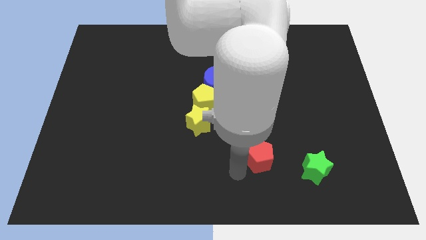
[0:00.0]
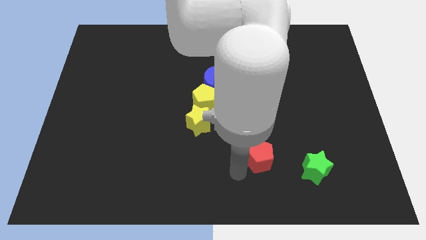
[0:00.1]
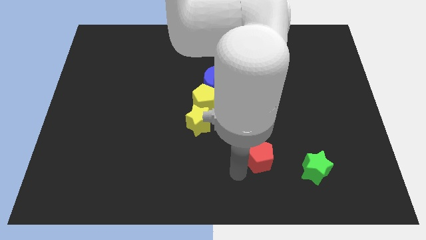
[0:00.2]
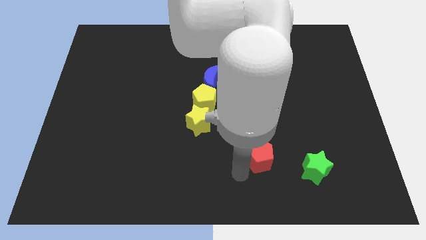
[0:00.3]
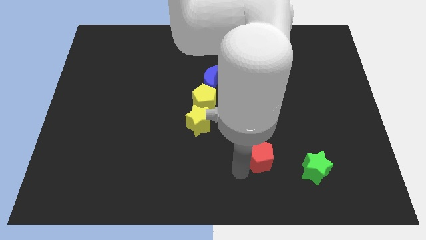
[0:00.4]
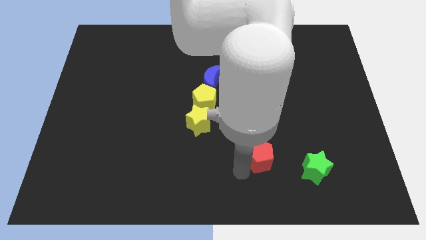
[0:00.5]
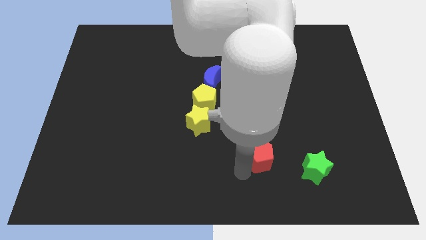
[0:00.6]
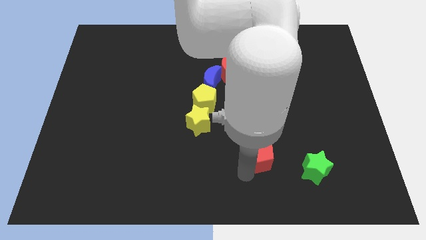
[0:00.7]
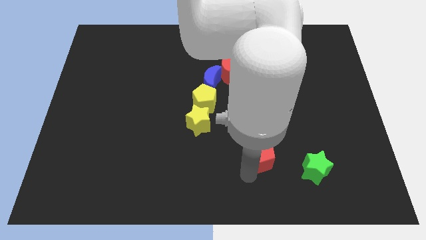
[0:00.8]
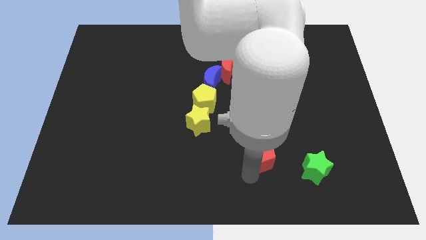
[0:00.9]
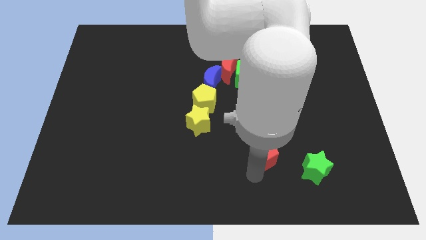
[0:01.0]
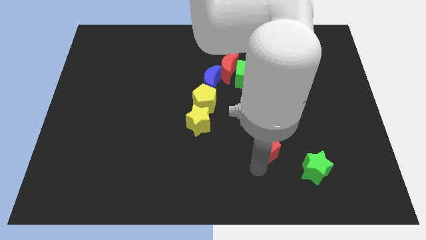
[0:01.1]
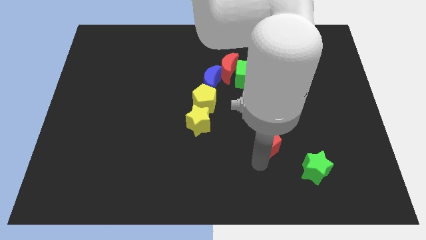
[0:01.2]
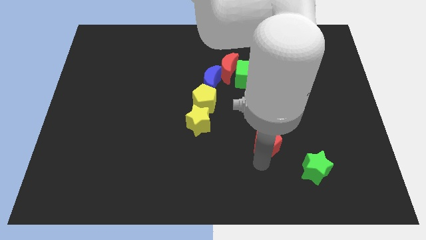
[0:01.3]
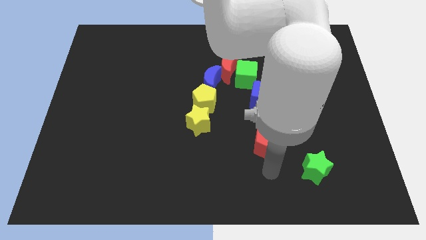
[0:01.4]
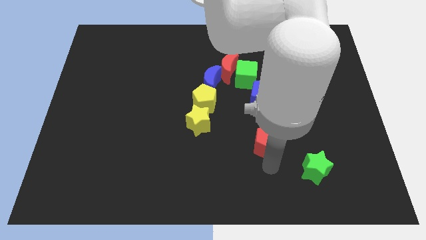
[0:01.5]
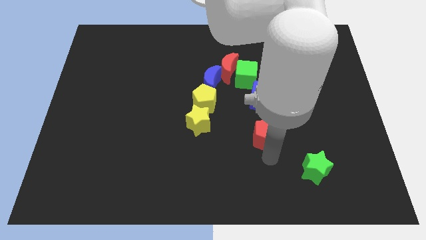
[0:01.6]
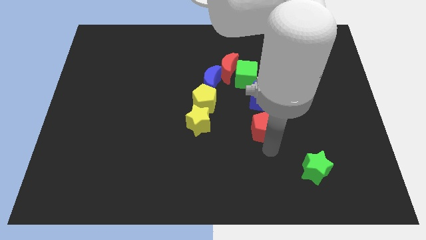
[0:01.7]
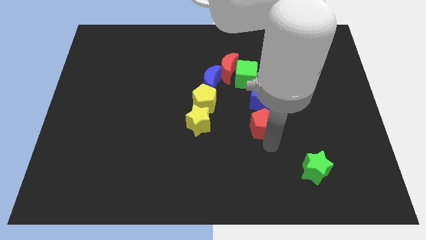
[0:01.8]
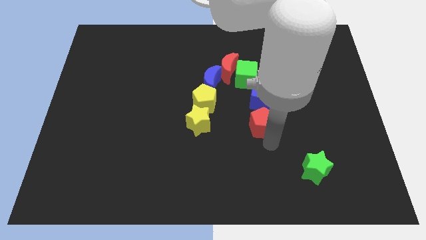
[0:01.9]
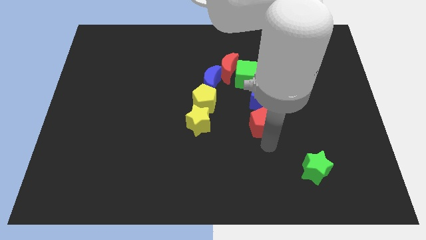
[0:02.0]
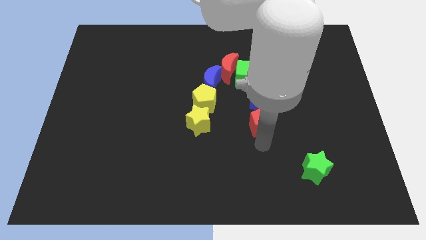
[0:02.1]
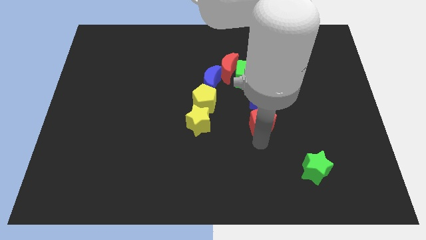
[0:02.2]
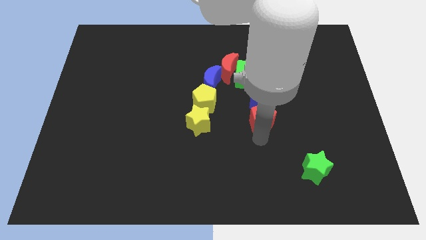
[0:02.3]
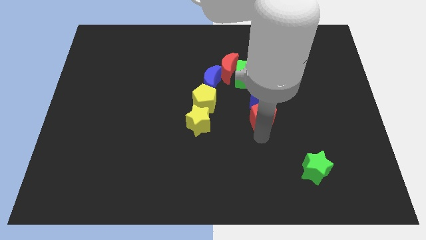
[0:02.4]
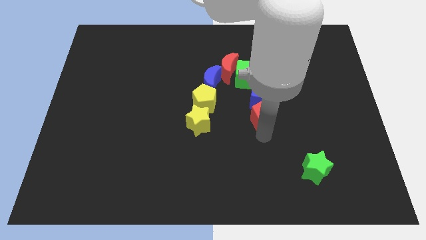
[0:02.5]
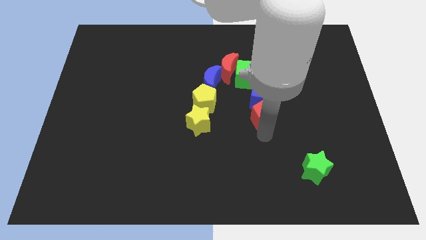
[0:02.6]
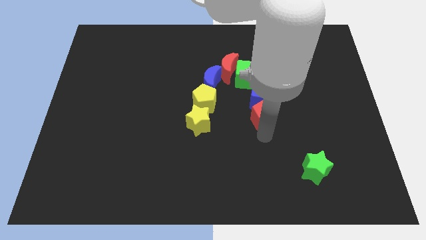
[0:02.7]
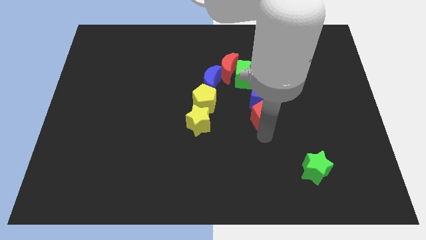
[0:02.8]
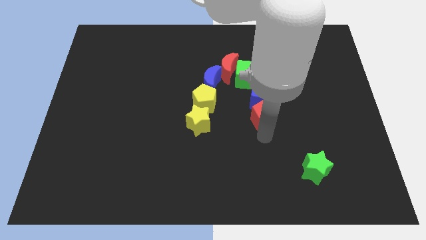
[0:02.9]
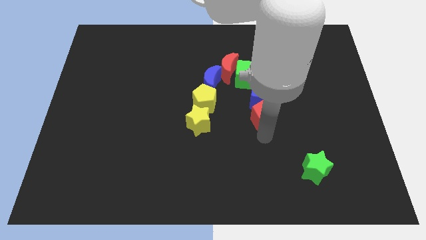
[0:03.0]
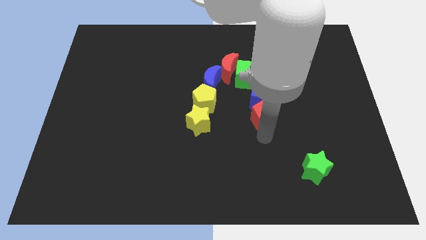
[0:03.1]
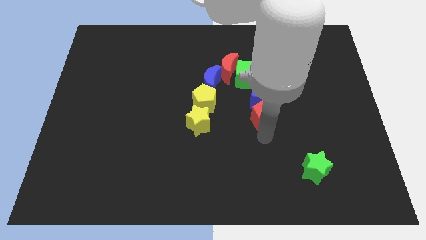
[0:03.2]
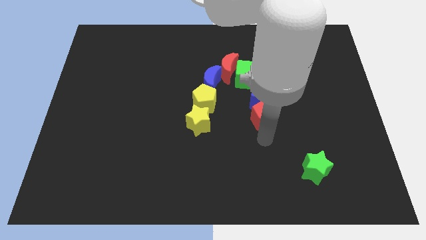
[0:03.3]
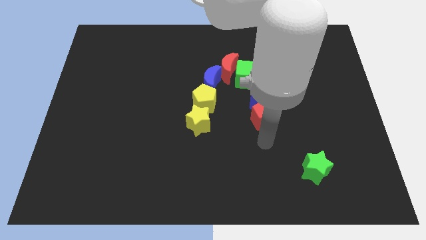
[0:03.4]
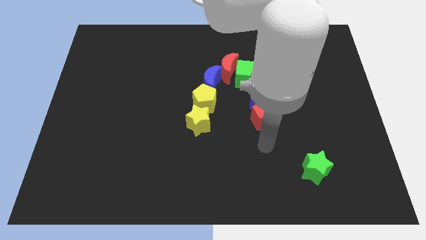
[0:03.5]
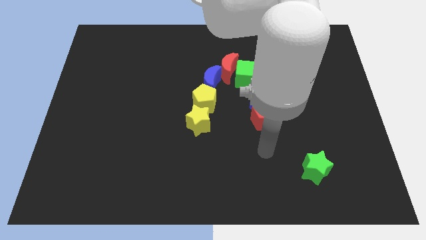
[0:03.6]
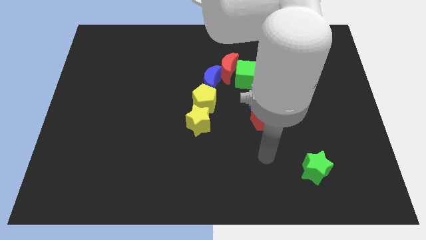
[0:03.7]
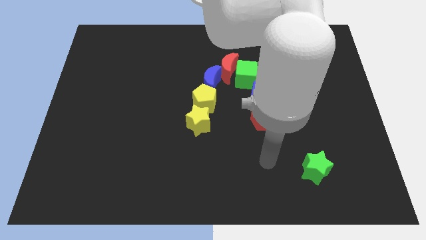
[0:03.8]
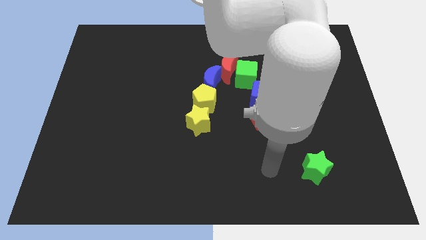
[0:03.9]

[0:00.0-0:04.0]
place red pentagon below blue cube

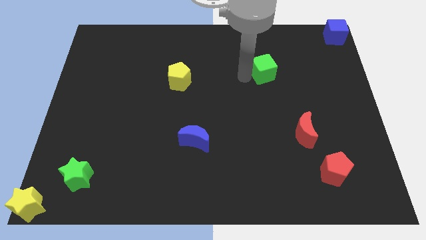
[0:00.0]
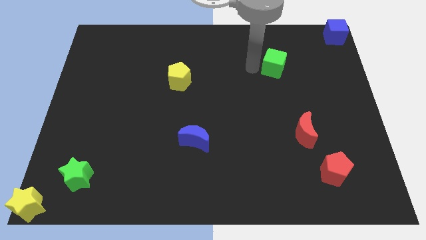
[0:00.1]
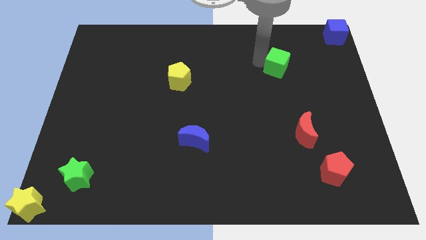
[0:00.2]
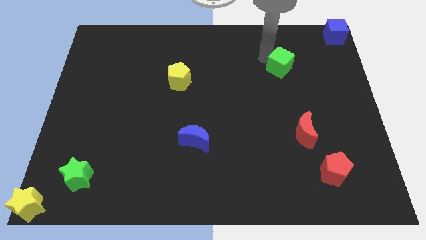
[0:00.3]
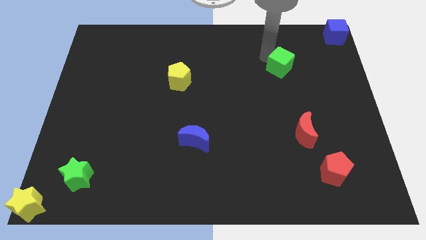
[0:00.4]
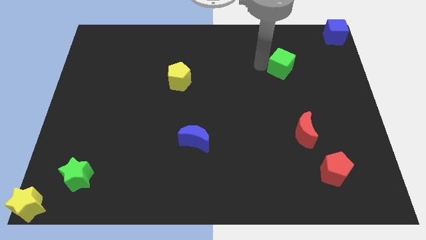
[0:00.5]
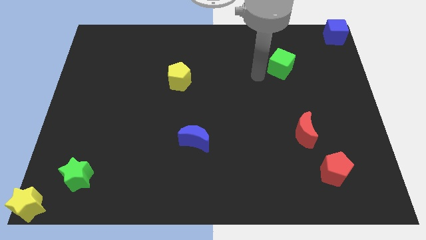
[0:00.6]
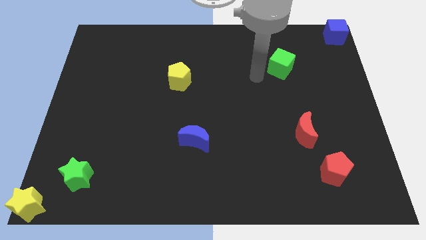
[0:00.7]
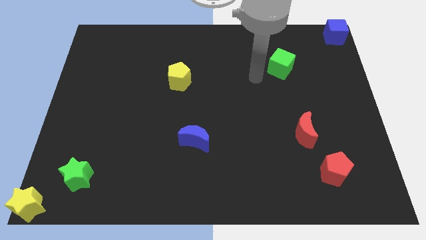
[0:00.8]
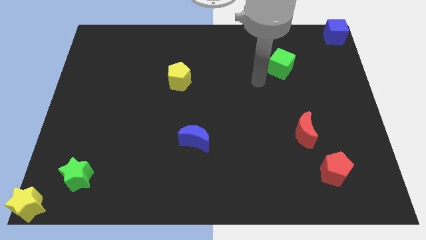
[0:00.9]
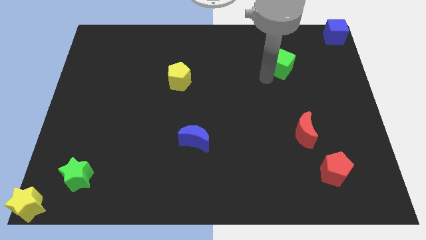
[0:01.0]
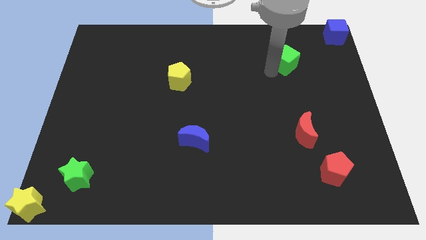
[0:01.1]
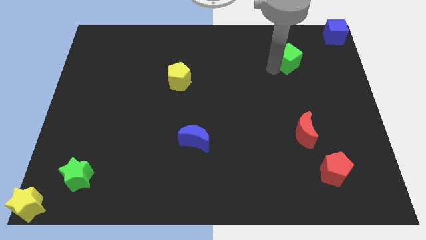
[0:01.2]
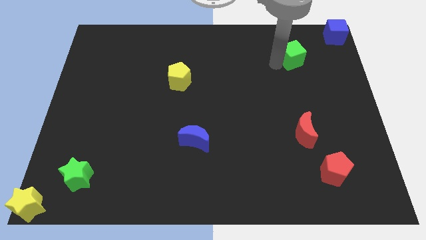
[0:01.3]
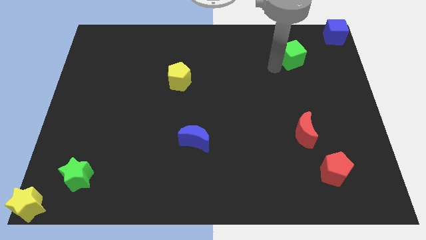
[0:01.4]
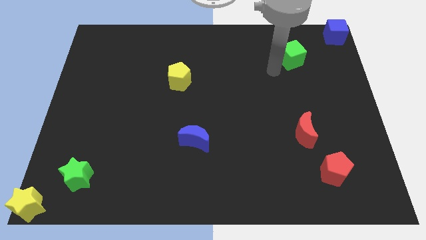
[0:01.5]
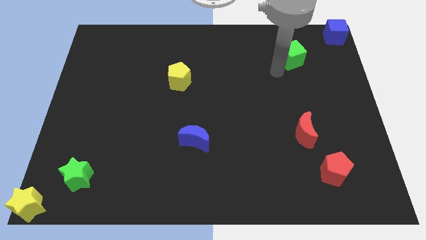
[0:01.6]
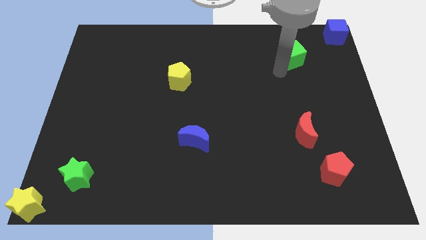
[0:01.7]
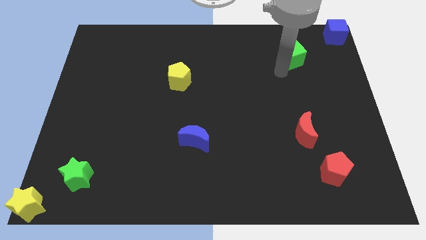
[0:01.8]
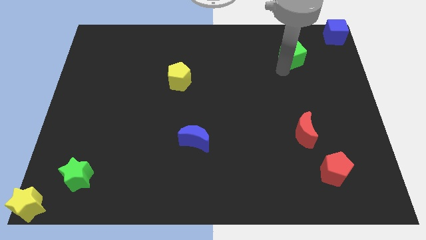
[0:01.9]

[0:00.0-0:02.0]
place the green cube vertically above the red crescent

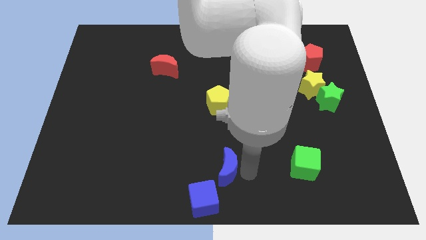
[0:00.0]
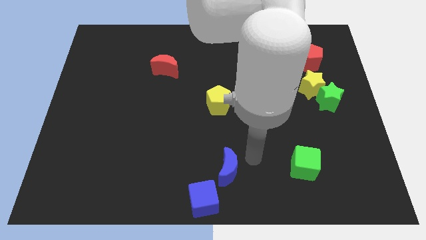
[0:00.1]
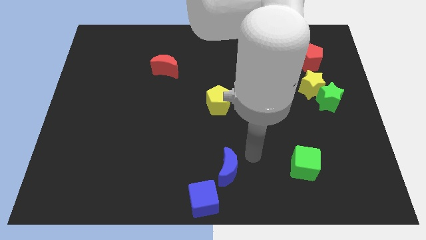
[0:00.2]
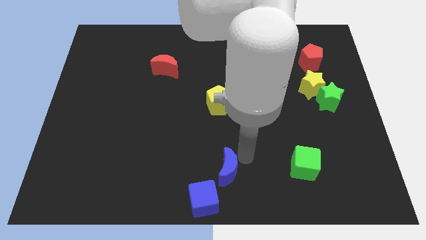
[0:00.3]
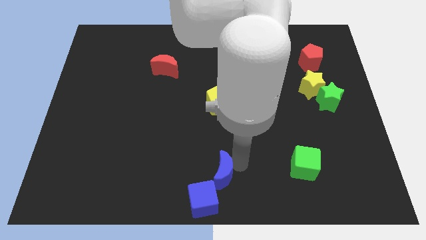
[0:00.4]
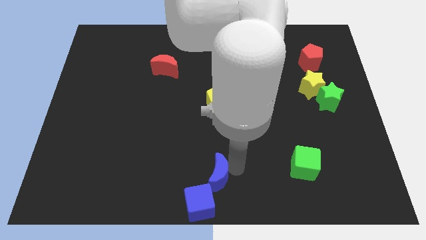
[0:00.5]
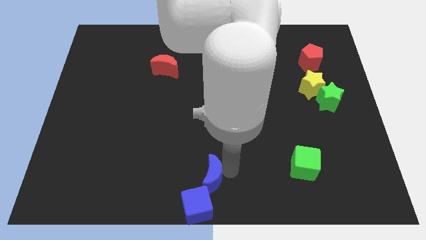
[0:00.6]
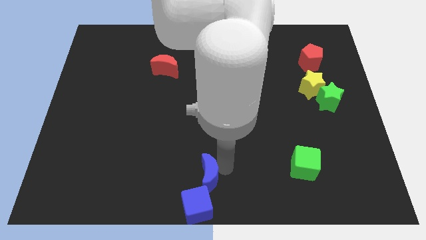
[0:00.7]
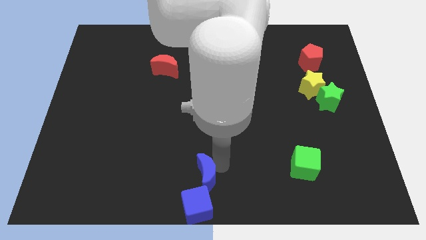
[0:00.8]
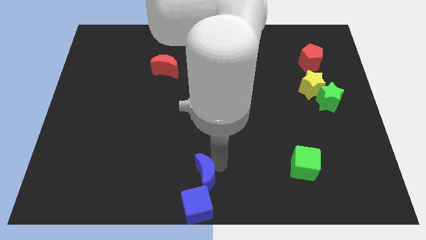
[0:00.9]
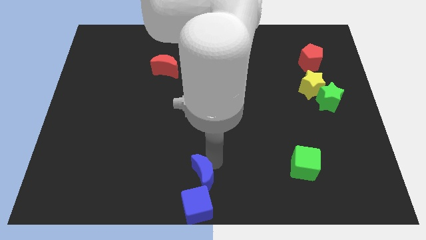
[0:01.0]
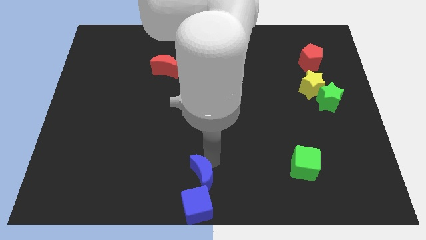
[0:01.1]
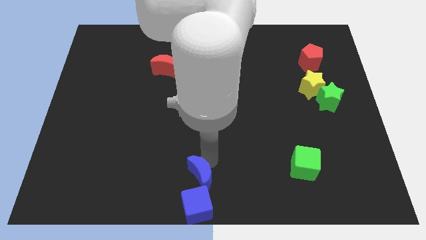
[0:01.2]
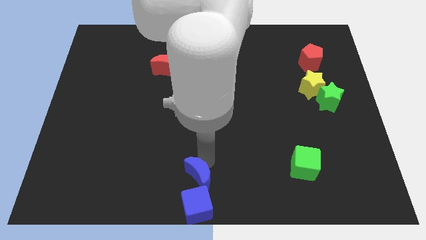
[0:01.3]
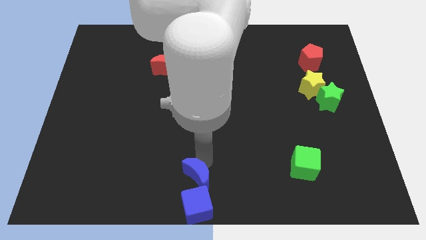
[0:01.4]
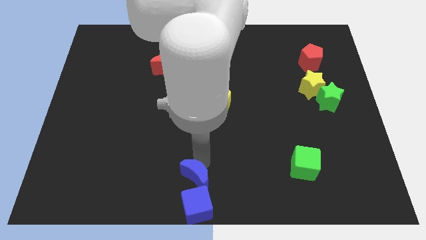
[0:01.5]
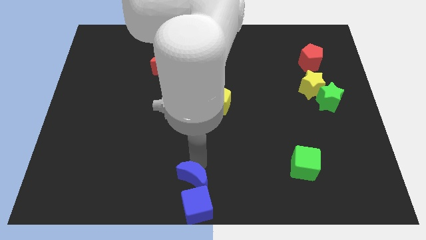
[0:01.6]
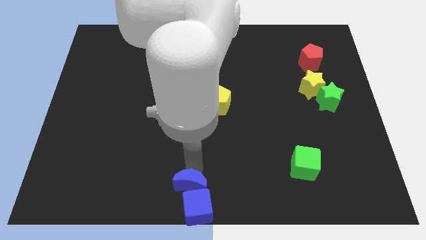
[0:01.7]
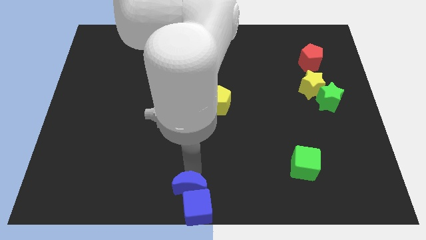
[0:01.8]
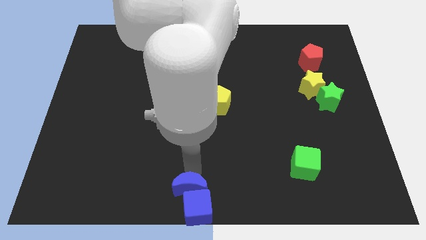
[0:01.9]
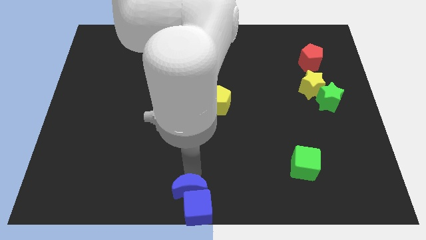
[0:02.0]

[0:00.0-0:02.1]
move the blue crescent into the blue cube

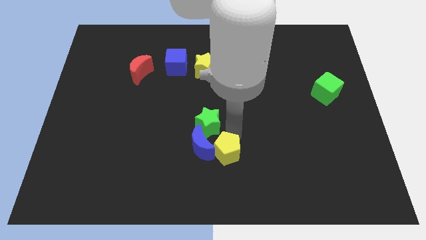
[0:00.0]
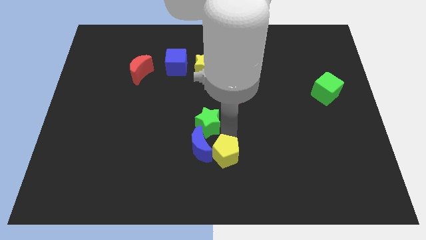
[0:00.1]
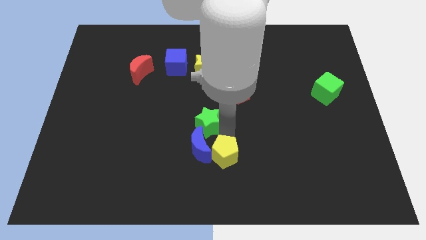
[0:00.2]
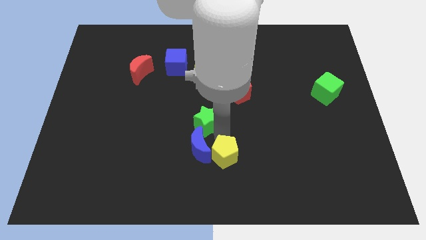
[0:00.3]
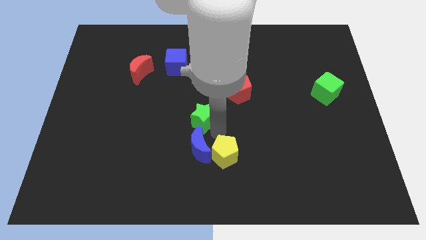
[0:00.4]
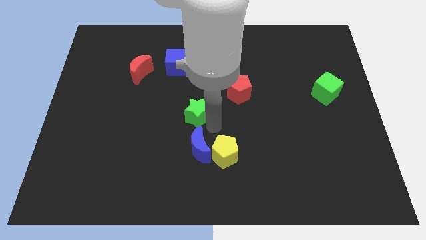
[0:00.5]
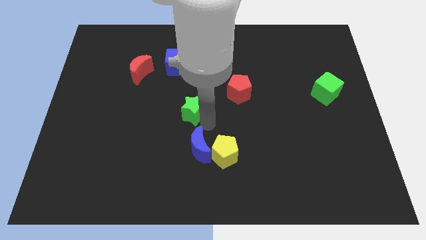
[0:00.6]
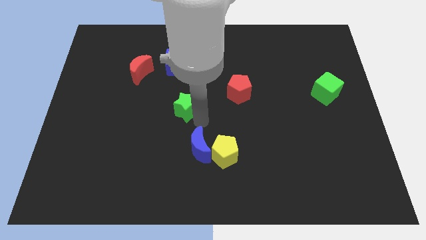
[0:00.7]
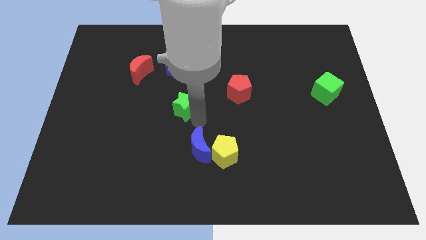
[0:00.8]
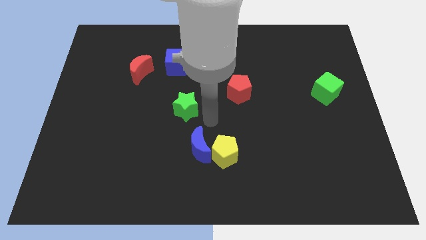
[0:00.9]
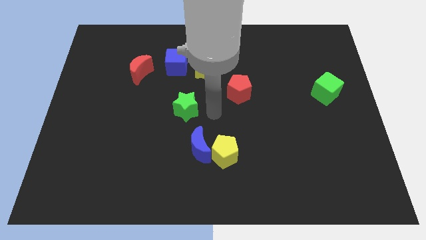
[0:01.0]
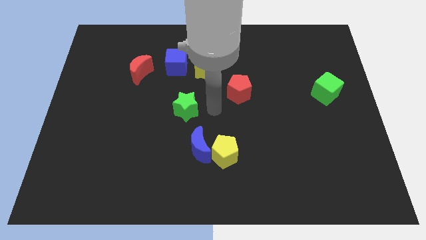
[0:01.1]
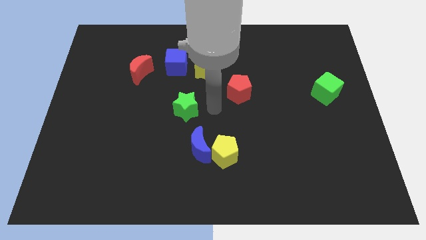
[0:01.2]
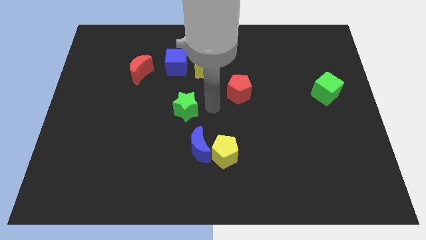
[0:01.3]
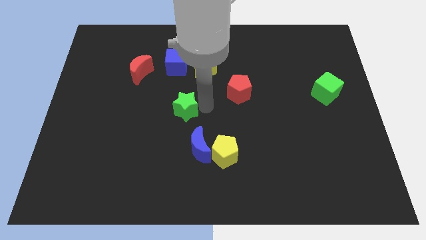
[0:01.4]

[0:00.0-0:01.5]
move the green star slightly above
